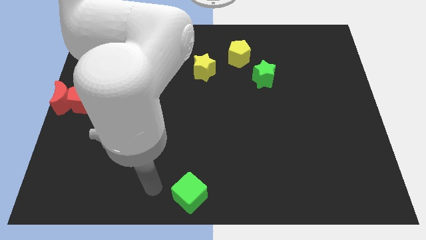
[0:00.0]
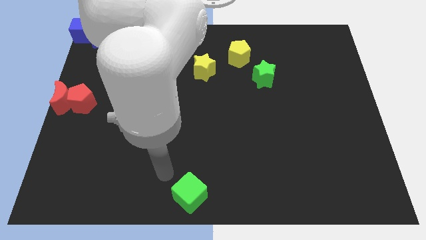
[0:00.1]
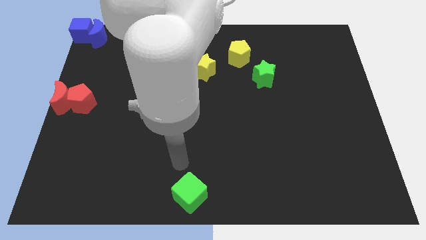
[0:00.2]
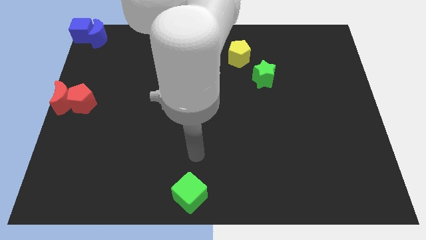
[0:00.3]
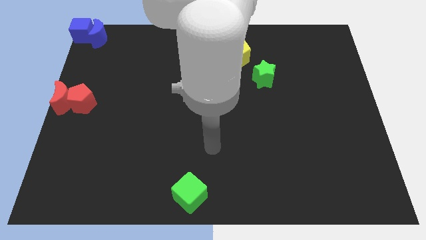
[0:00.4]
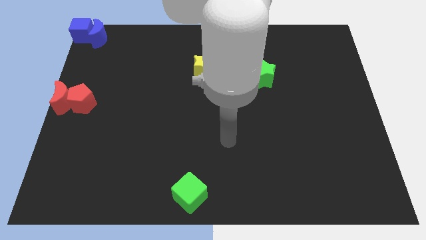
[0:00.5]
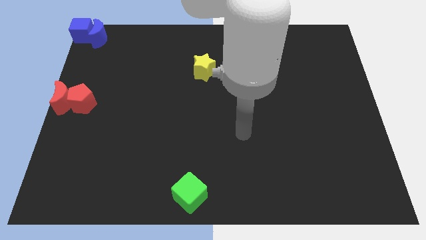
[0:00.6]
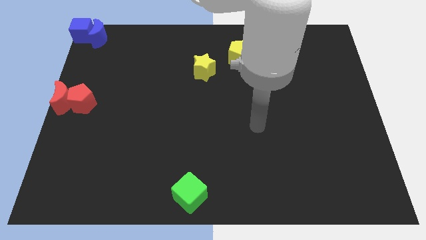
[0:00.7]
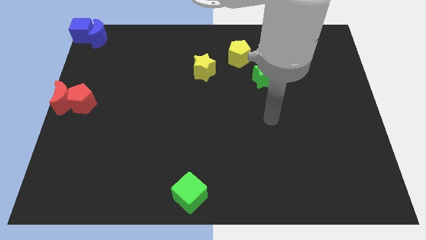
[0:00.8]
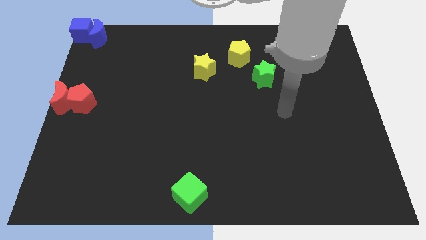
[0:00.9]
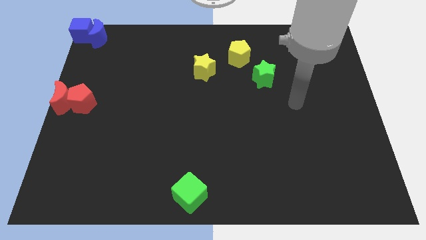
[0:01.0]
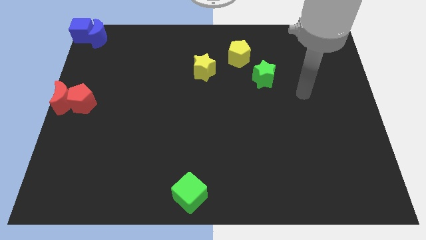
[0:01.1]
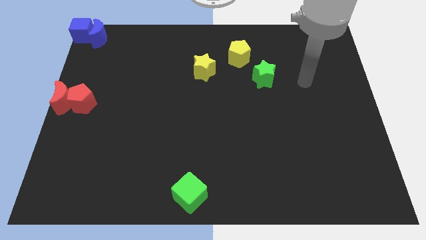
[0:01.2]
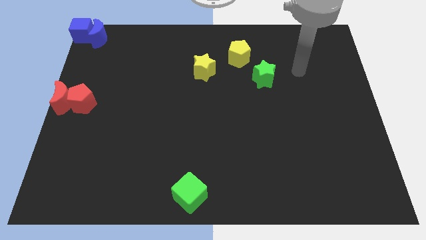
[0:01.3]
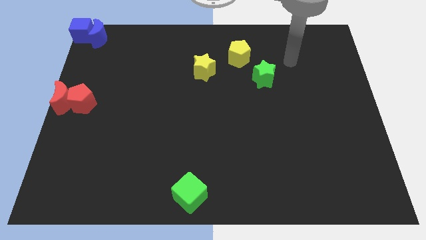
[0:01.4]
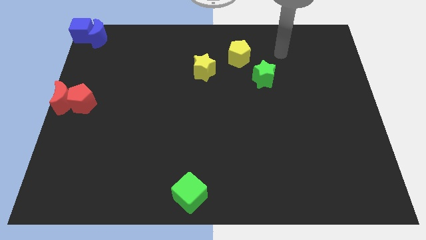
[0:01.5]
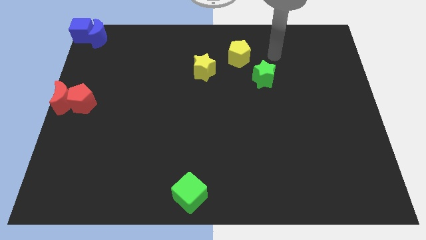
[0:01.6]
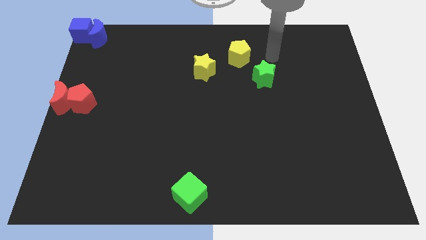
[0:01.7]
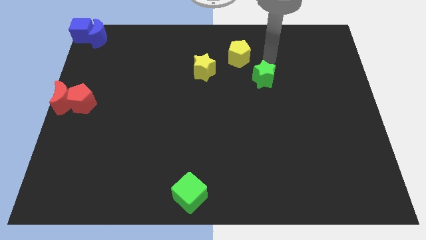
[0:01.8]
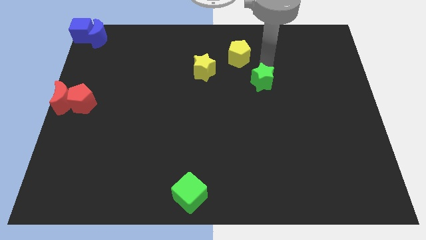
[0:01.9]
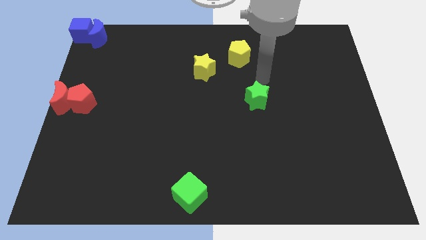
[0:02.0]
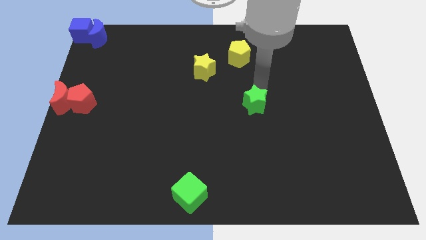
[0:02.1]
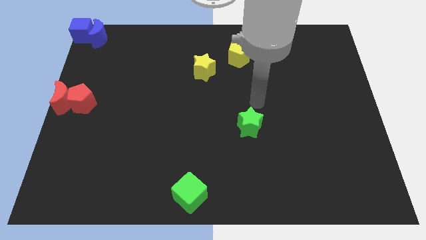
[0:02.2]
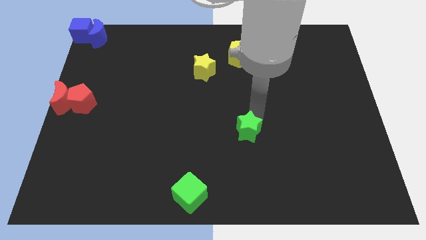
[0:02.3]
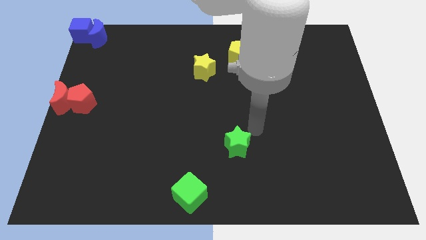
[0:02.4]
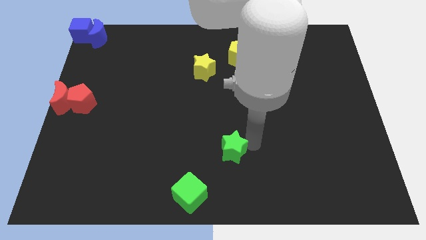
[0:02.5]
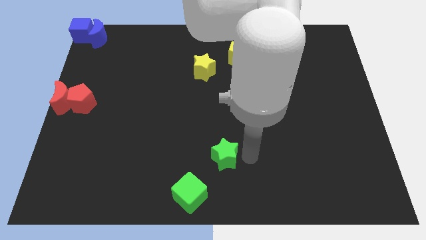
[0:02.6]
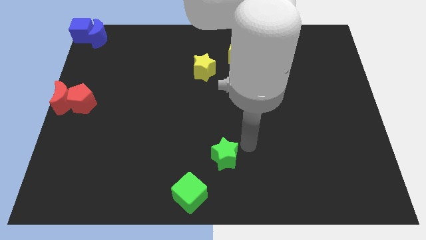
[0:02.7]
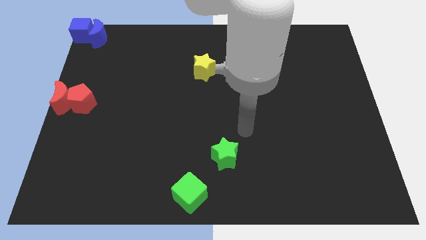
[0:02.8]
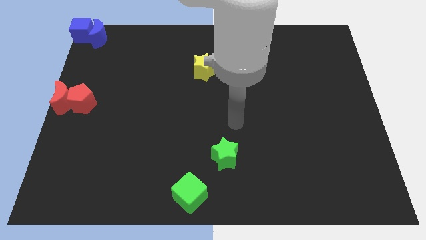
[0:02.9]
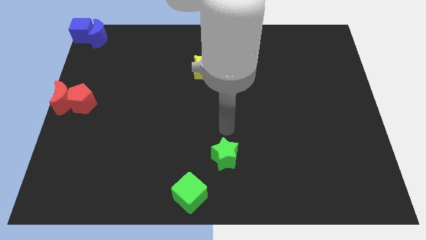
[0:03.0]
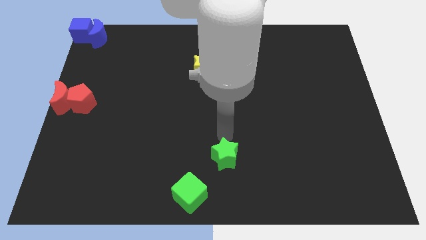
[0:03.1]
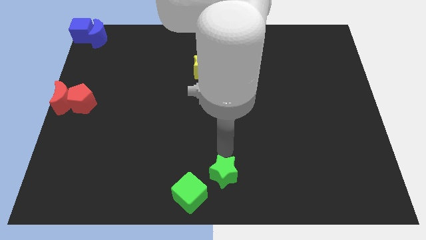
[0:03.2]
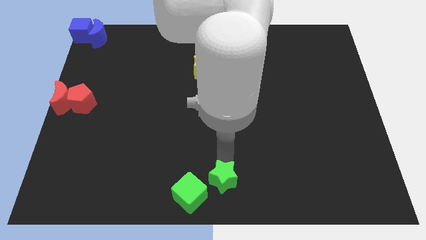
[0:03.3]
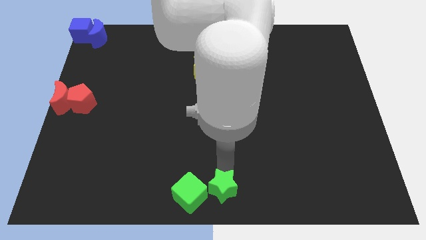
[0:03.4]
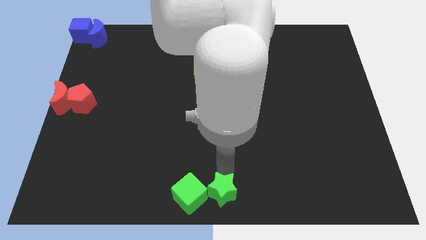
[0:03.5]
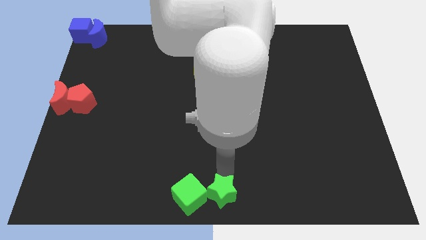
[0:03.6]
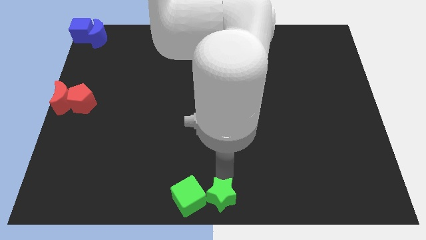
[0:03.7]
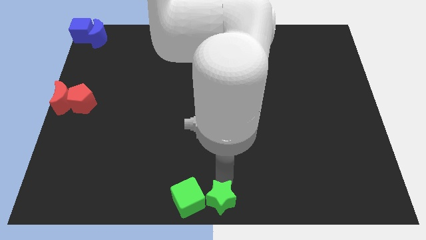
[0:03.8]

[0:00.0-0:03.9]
push the green star into the green cube

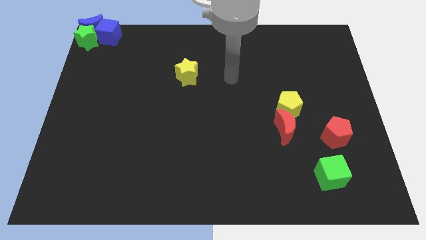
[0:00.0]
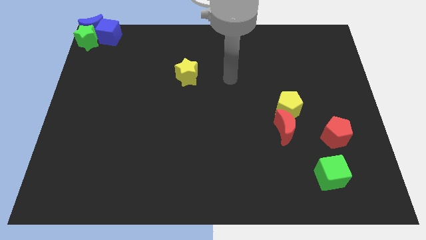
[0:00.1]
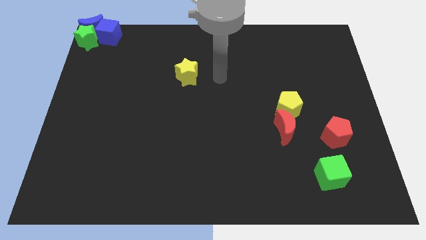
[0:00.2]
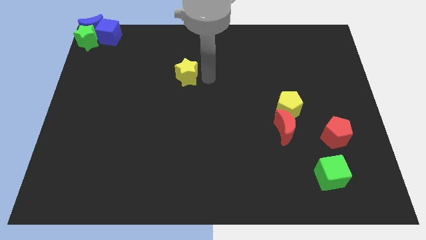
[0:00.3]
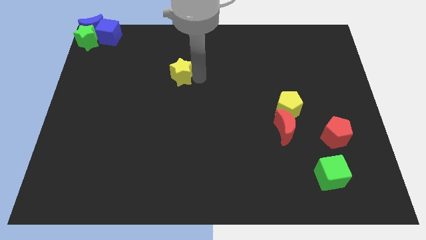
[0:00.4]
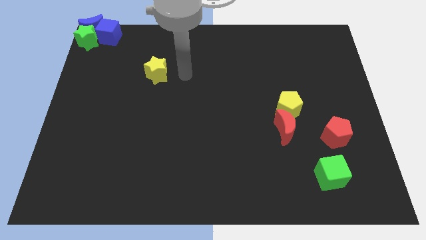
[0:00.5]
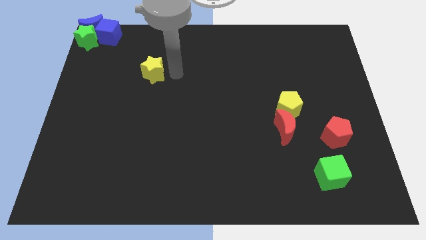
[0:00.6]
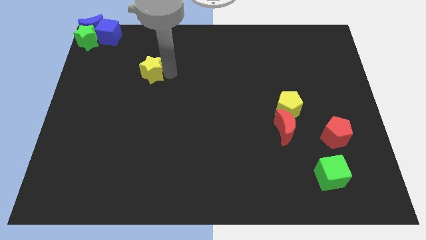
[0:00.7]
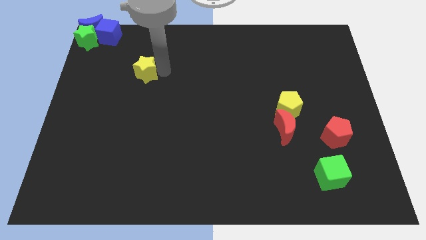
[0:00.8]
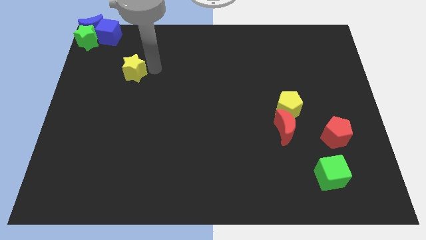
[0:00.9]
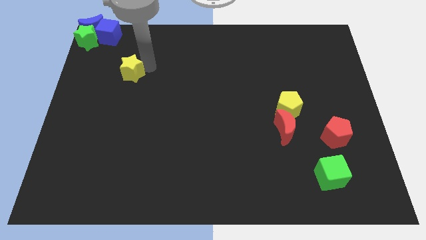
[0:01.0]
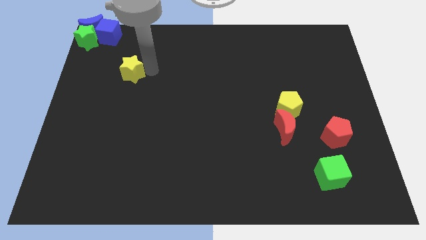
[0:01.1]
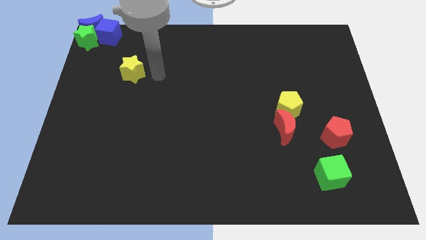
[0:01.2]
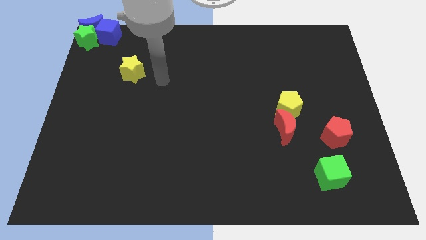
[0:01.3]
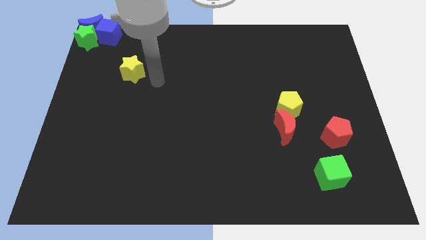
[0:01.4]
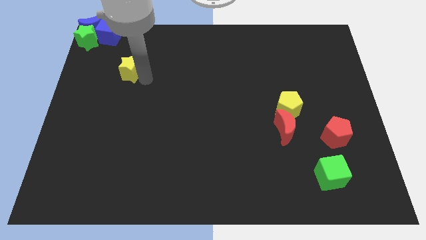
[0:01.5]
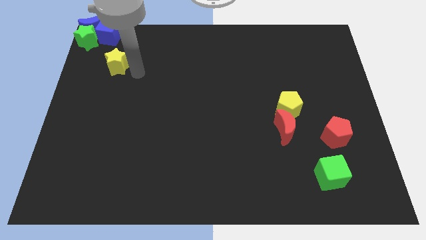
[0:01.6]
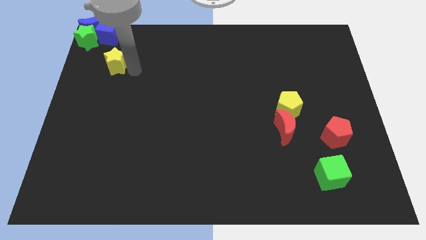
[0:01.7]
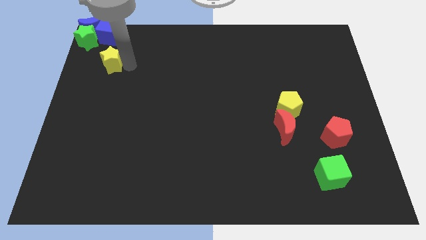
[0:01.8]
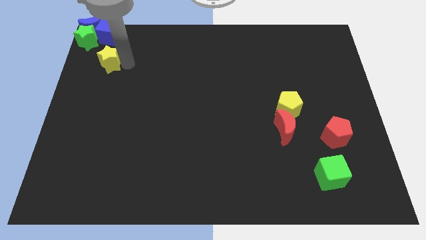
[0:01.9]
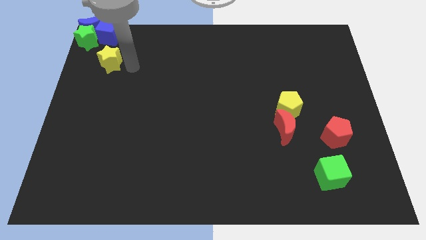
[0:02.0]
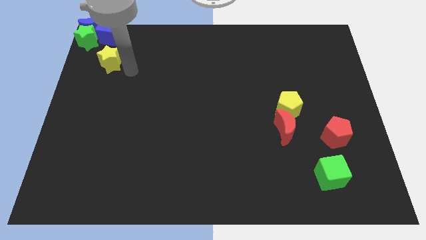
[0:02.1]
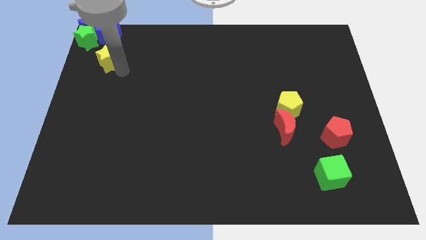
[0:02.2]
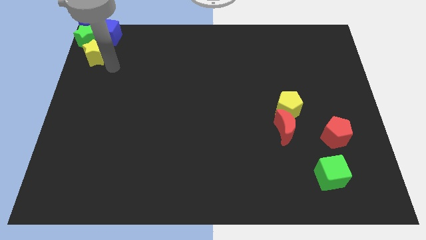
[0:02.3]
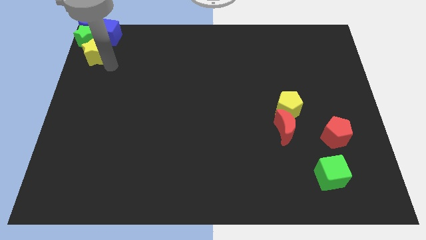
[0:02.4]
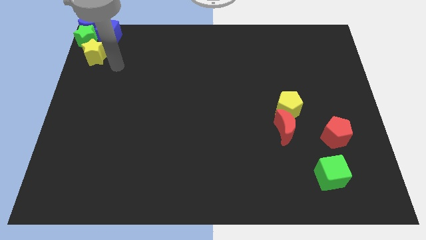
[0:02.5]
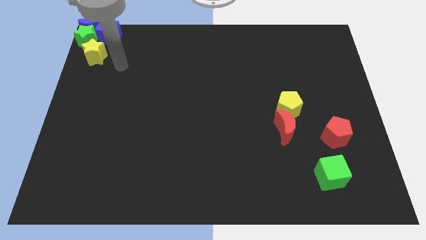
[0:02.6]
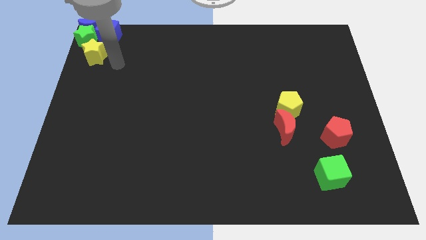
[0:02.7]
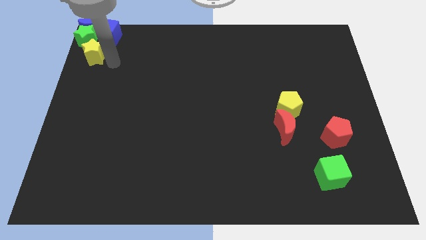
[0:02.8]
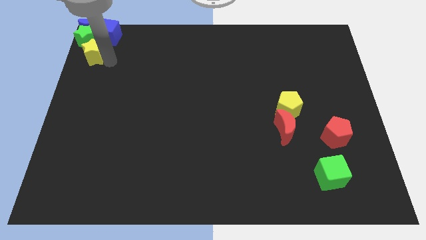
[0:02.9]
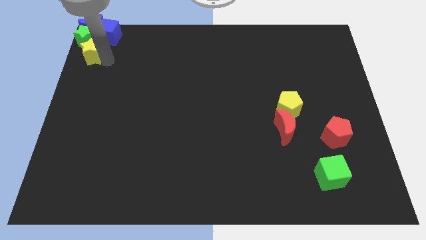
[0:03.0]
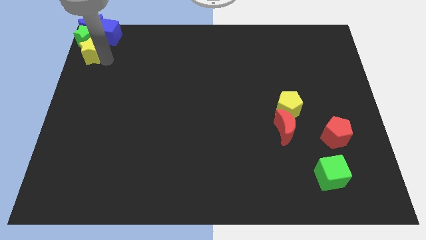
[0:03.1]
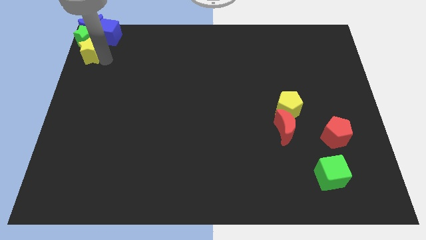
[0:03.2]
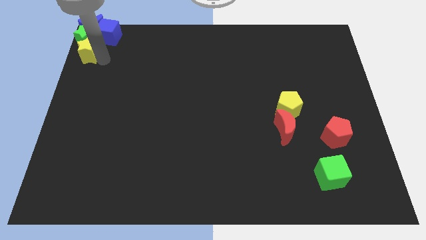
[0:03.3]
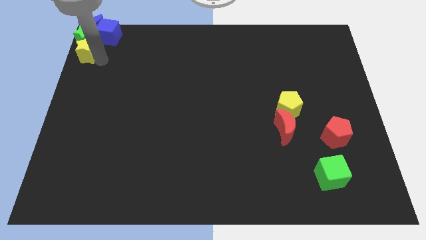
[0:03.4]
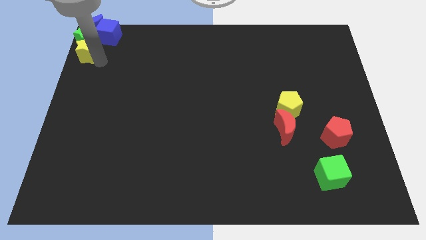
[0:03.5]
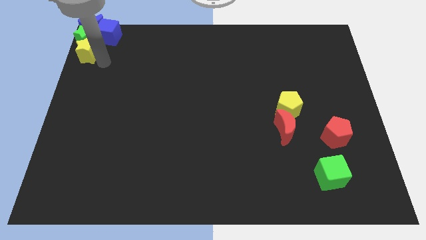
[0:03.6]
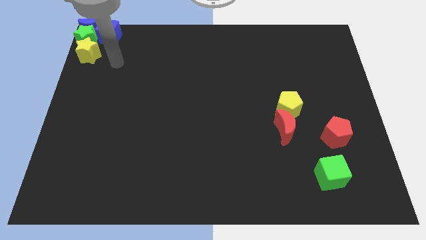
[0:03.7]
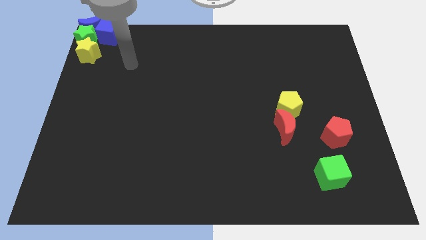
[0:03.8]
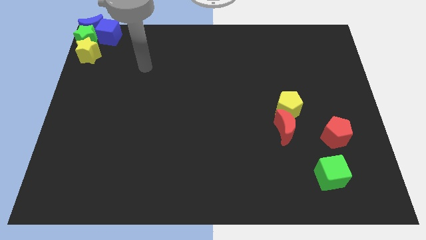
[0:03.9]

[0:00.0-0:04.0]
move the yellow star near green star

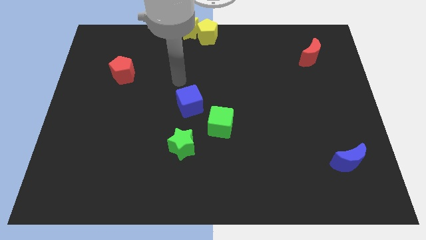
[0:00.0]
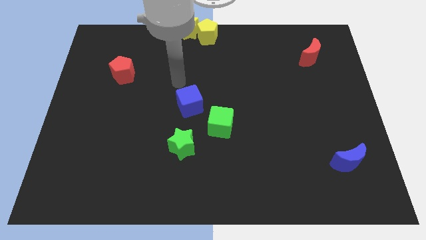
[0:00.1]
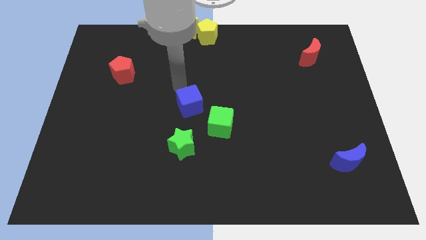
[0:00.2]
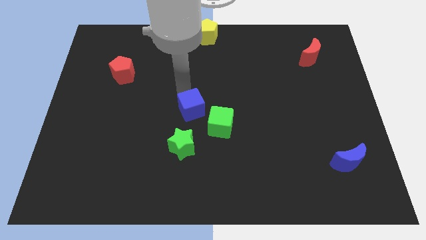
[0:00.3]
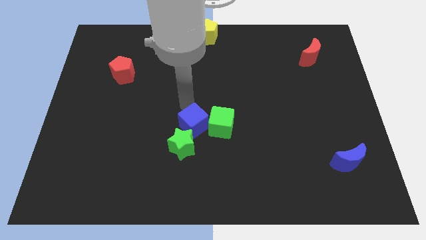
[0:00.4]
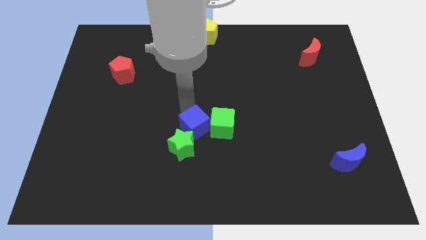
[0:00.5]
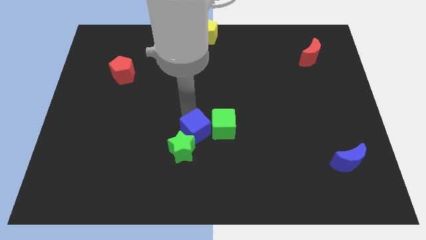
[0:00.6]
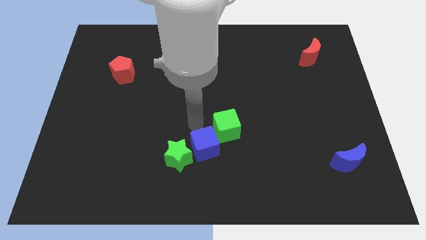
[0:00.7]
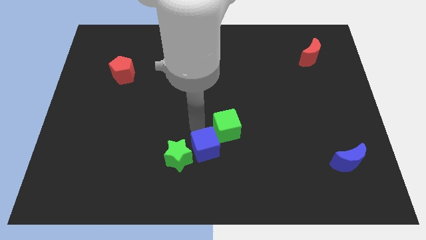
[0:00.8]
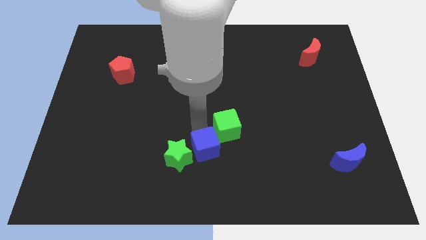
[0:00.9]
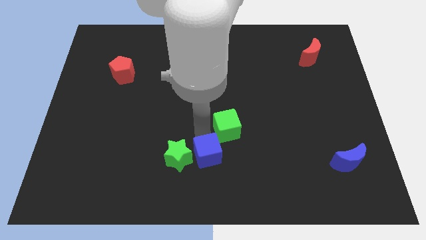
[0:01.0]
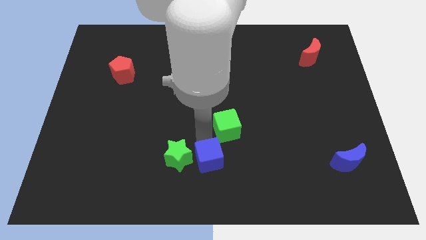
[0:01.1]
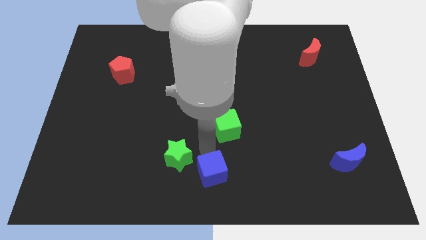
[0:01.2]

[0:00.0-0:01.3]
push blue cube to the right of the green star
